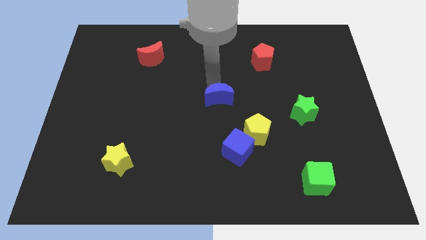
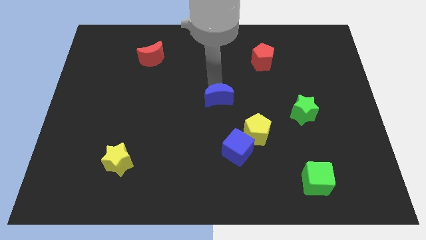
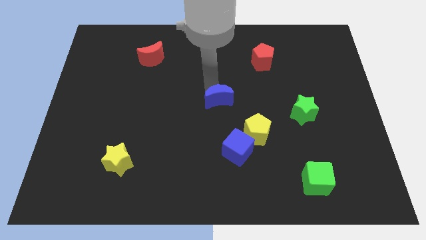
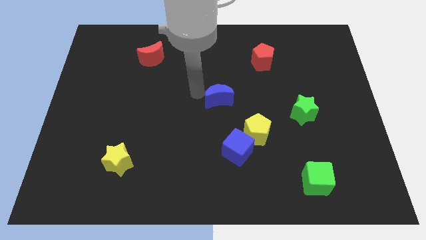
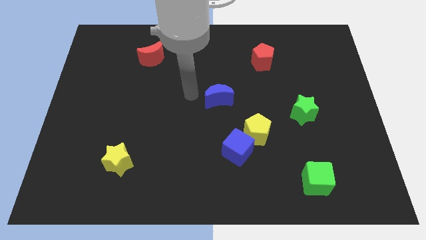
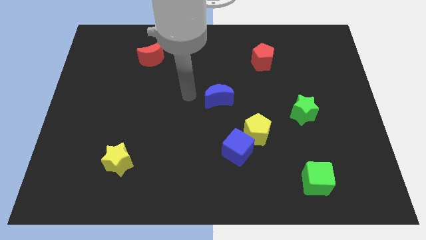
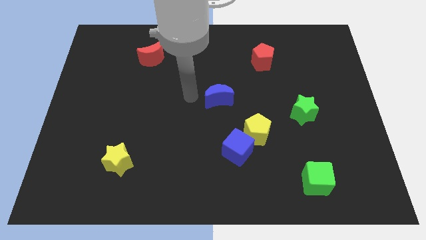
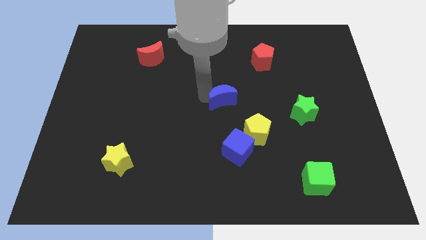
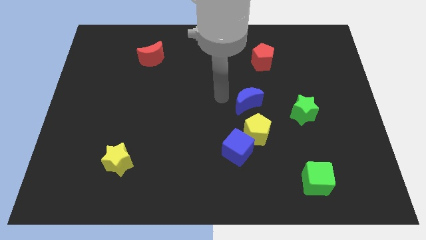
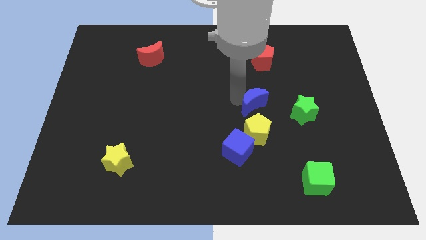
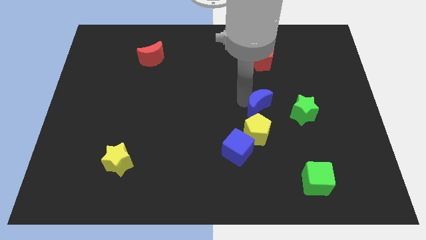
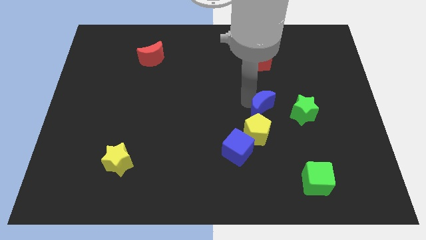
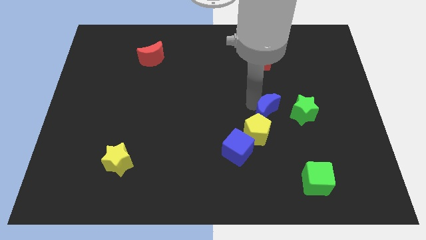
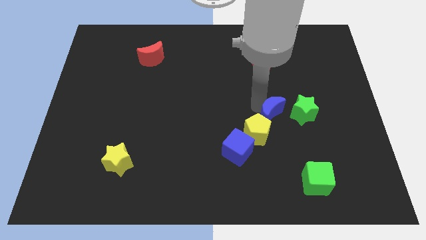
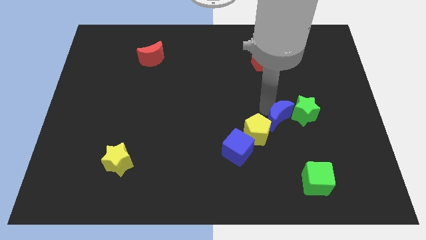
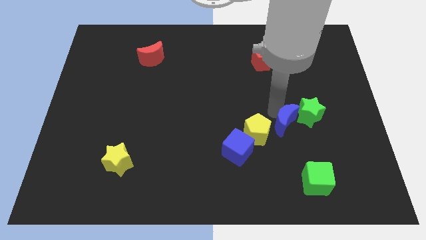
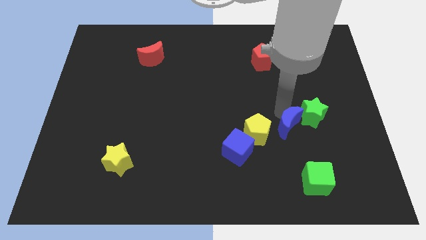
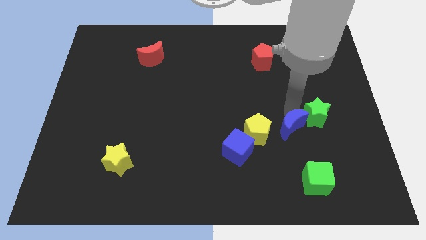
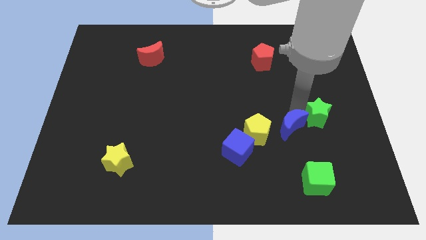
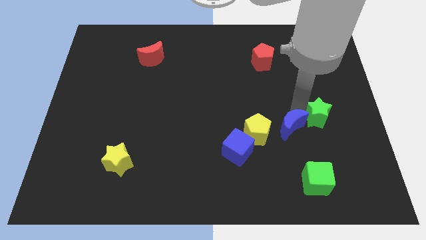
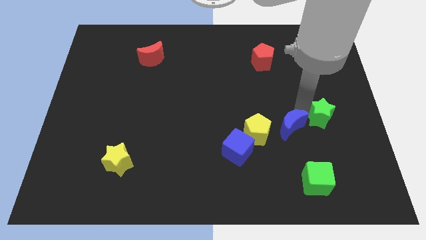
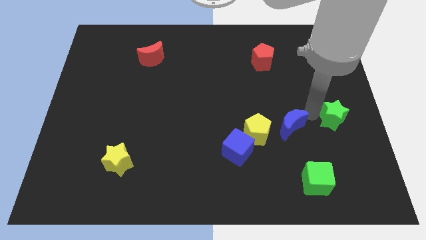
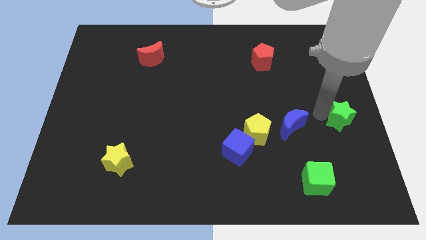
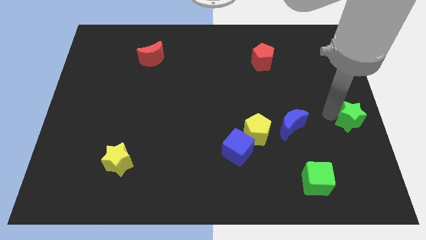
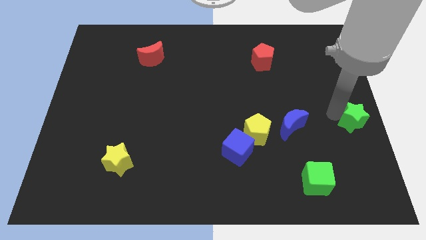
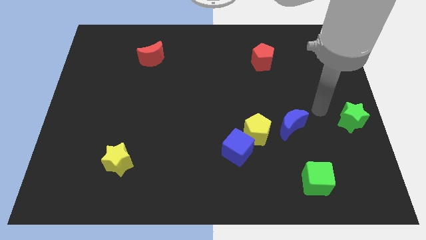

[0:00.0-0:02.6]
push green star slightly towards right

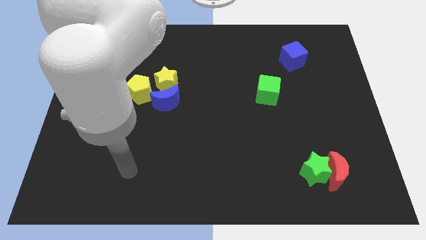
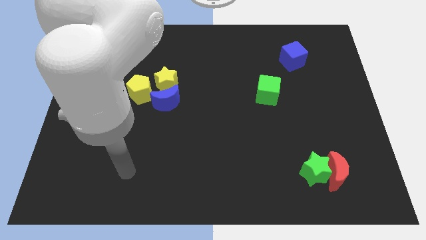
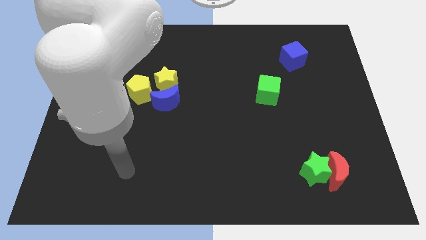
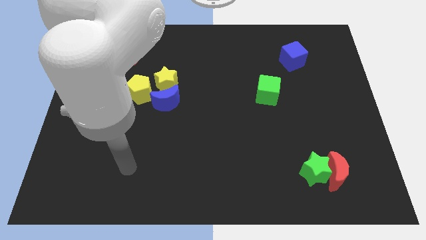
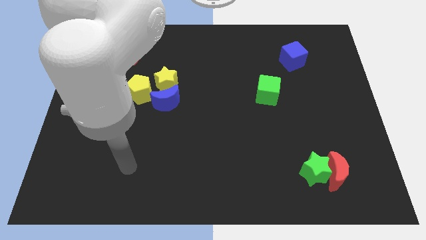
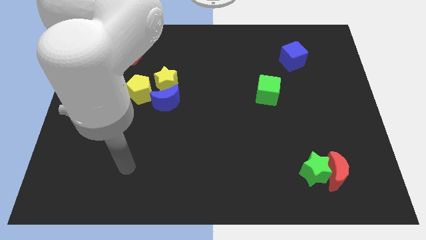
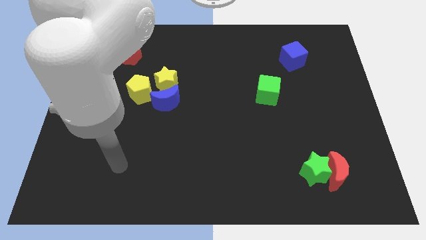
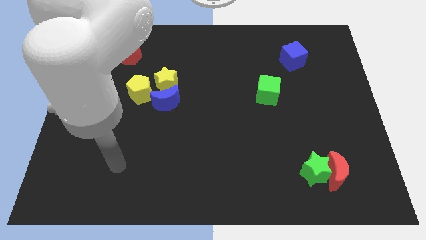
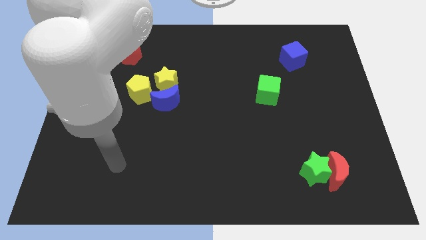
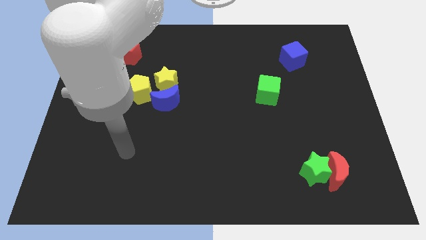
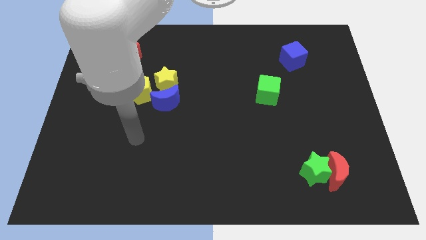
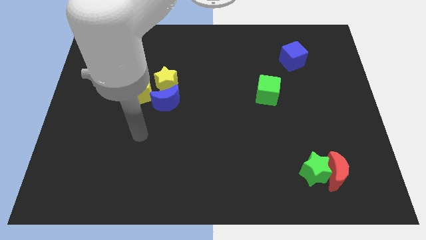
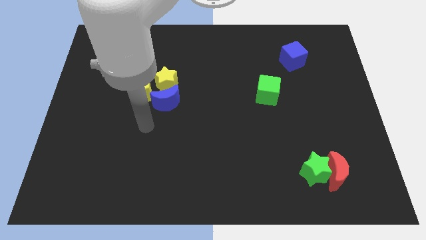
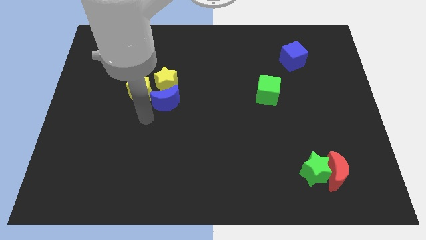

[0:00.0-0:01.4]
push arm close to blue moon

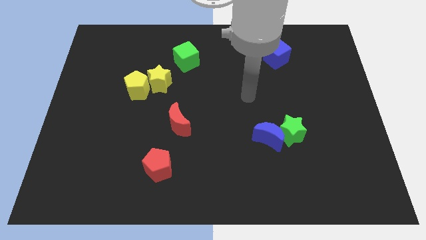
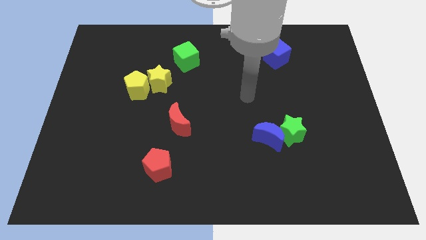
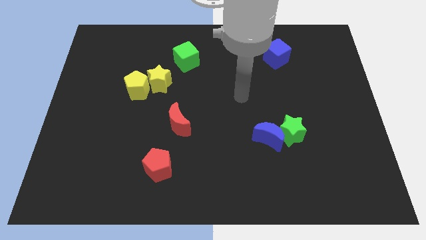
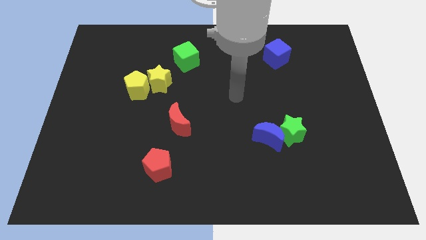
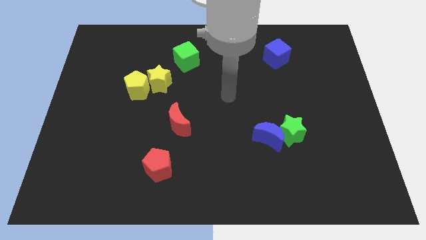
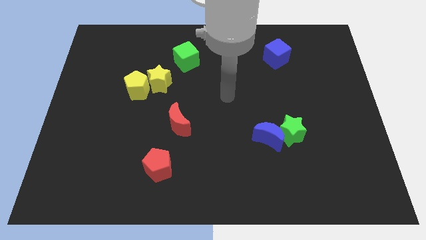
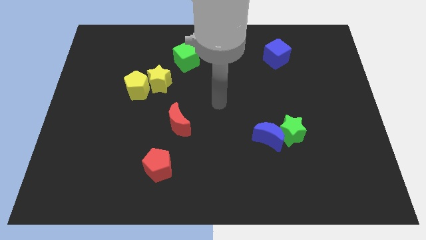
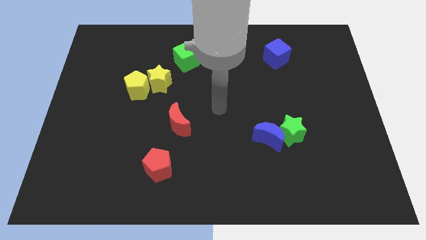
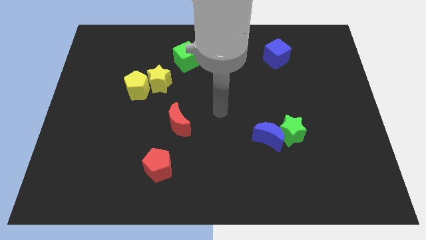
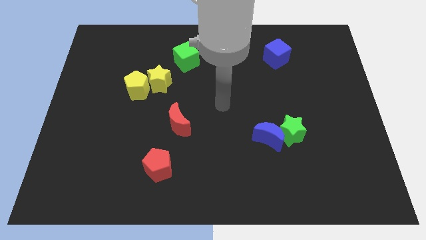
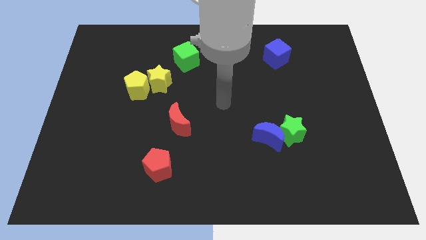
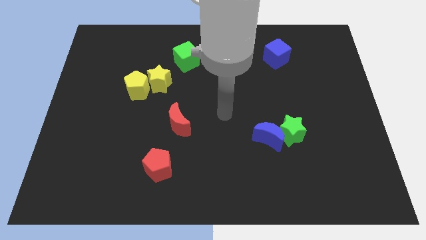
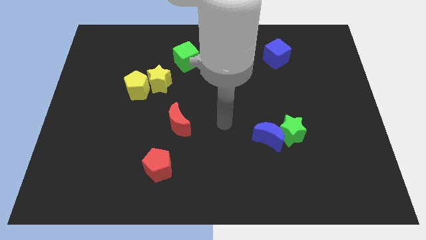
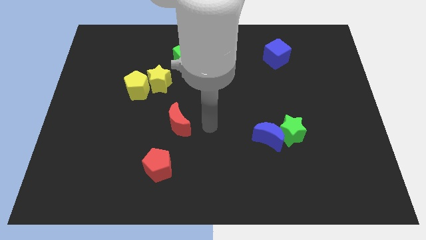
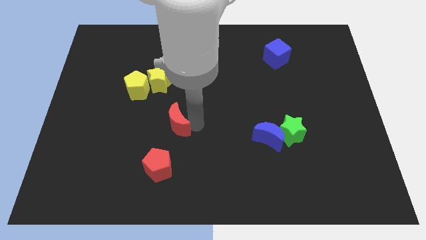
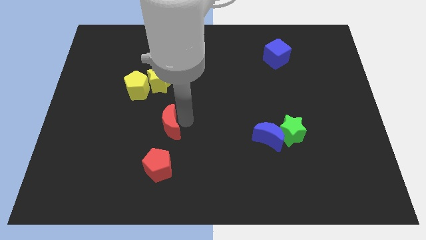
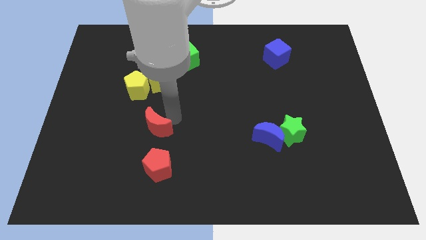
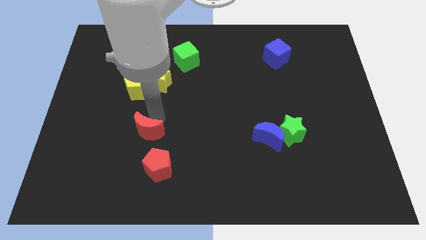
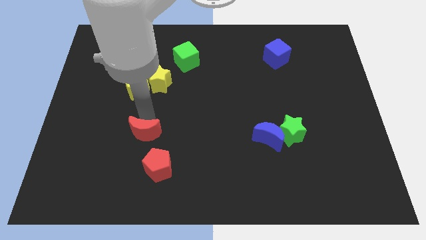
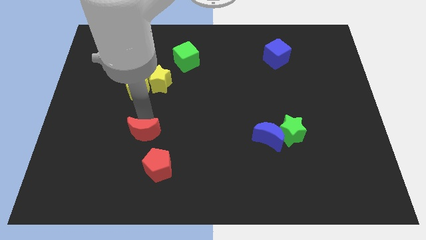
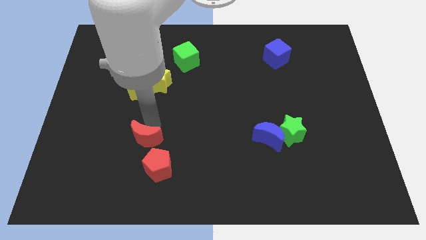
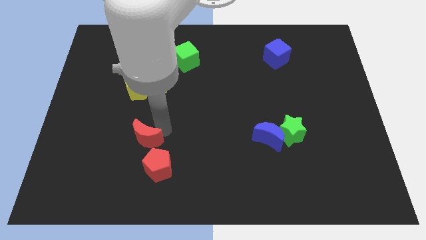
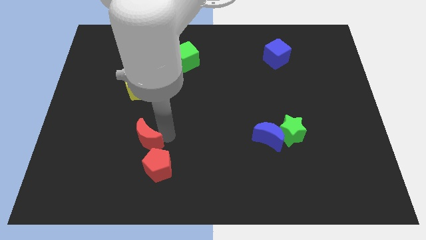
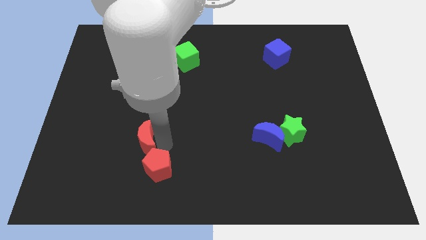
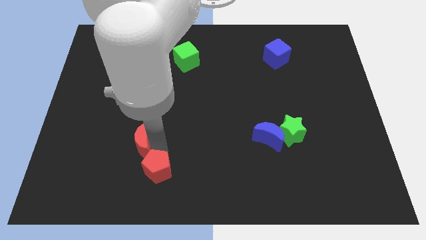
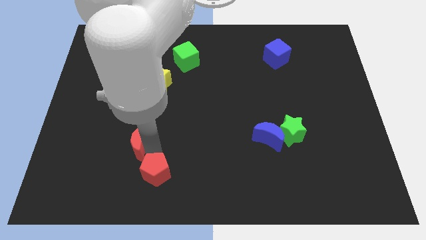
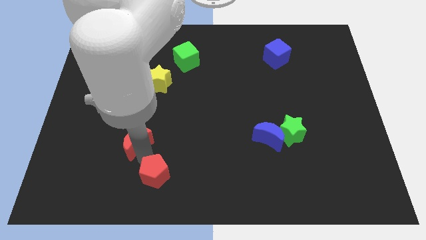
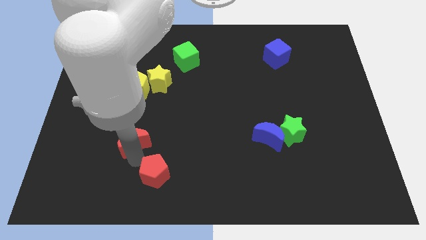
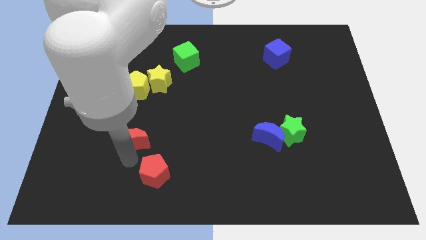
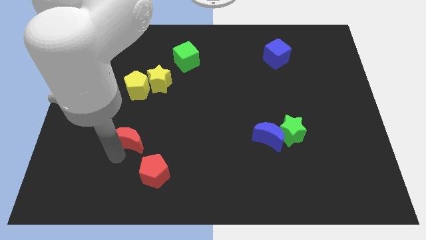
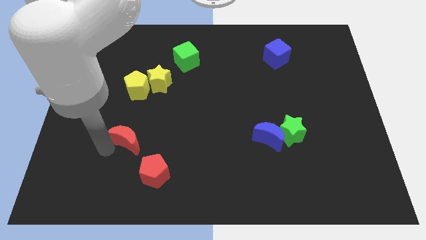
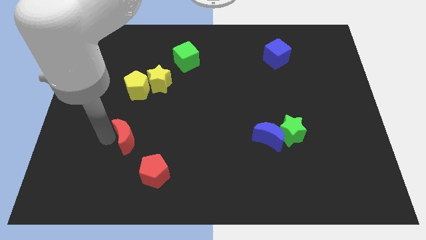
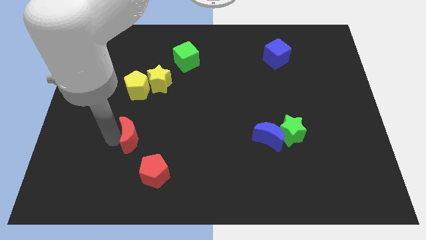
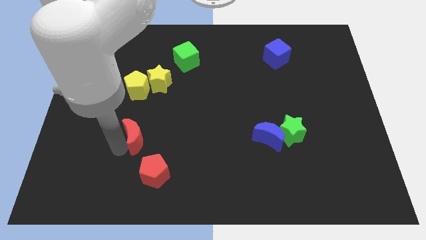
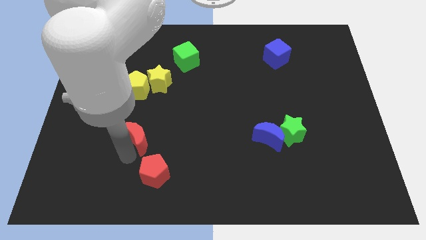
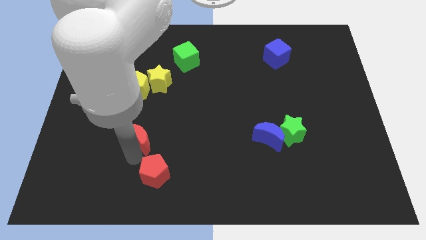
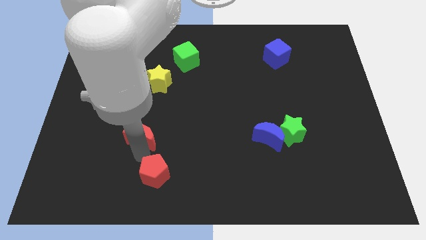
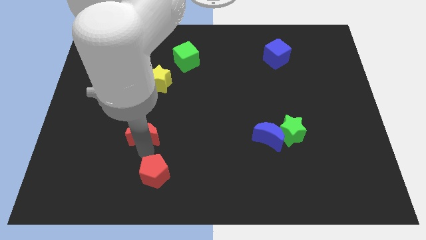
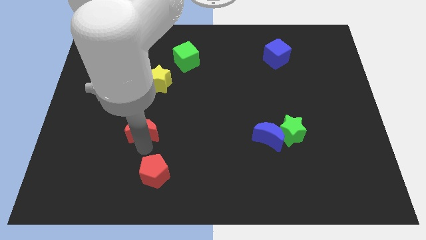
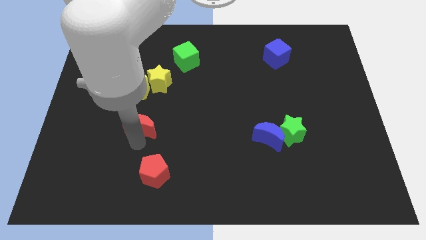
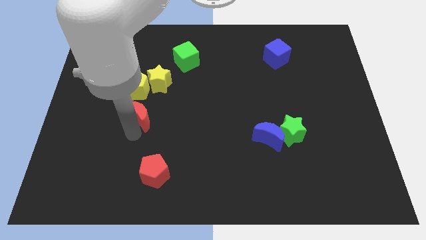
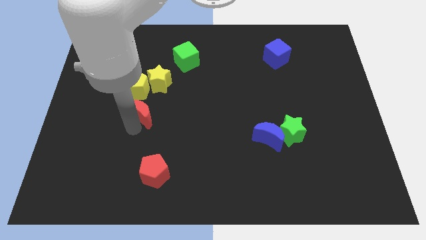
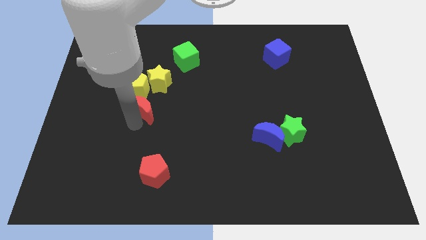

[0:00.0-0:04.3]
place red moon to the top of red pentagon

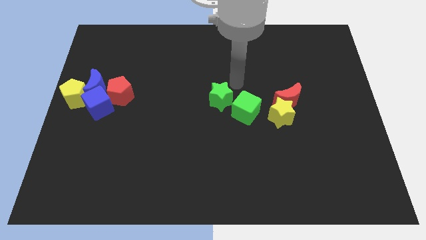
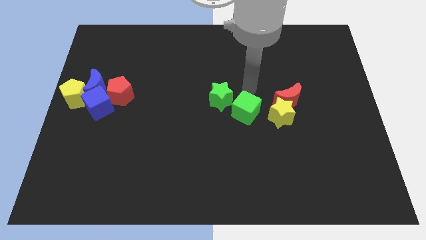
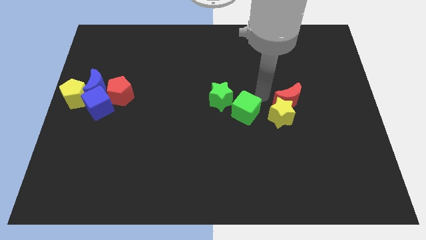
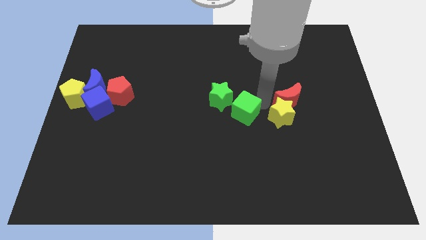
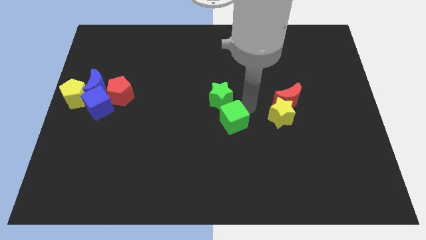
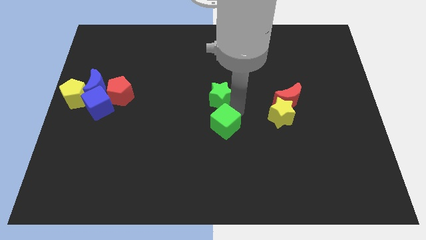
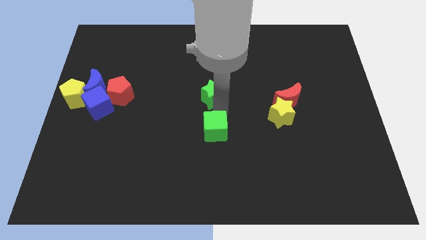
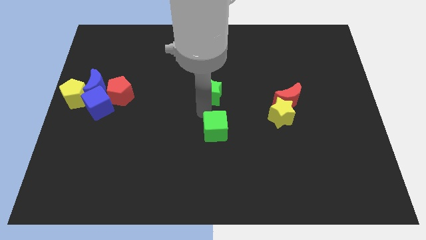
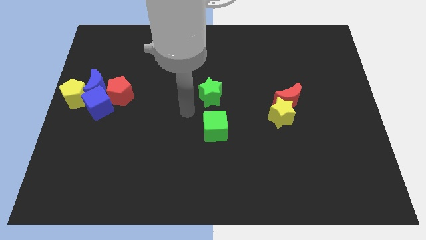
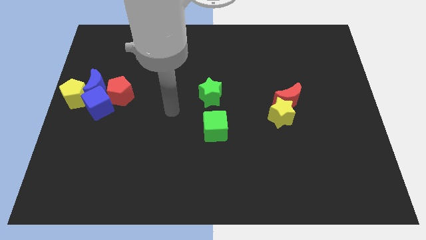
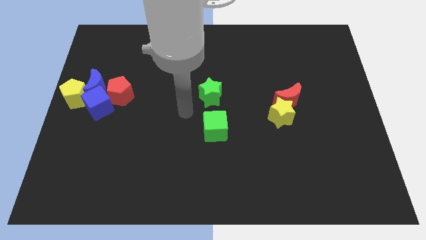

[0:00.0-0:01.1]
push the green cube towards the bottom of the green star
